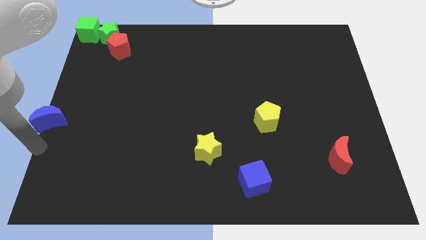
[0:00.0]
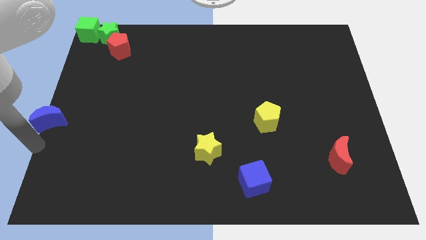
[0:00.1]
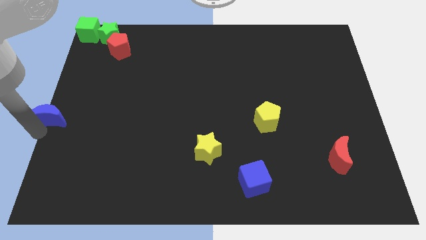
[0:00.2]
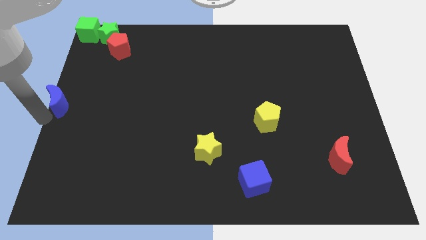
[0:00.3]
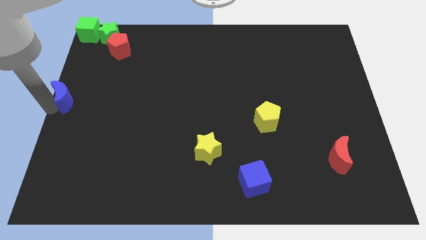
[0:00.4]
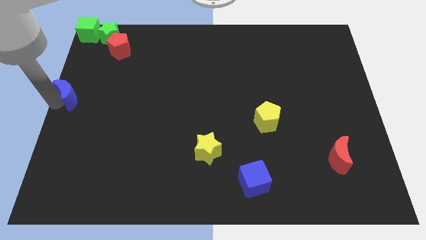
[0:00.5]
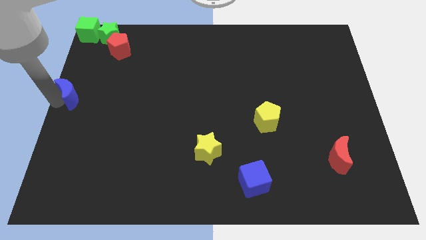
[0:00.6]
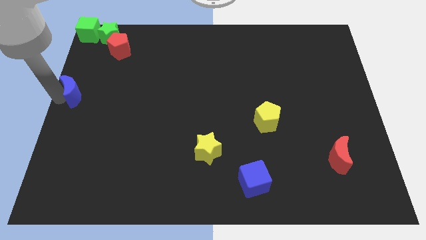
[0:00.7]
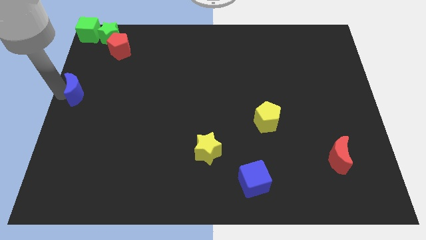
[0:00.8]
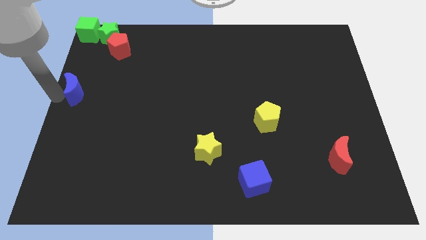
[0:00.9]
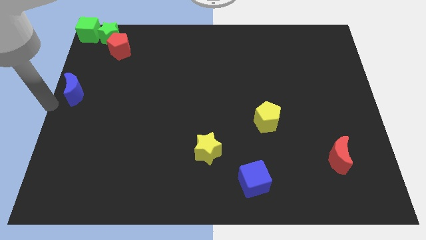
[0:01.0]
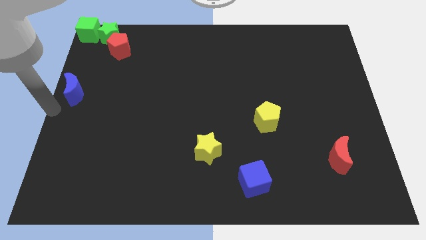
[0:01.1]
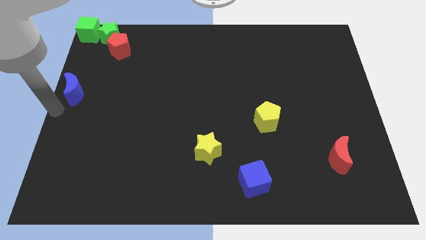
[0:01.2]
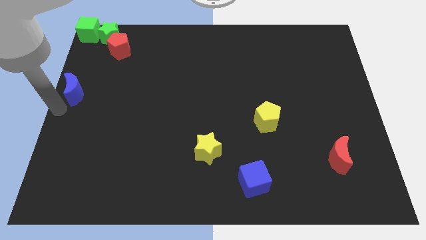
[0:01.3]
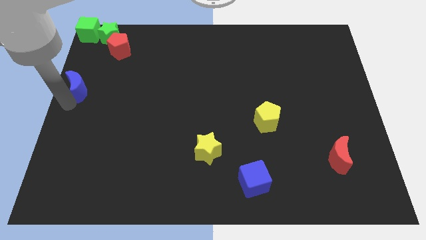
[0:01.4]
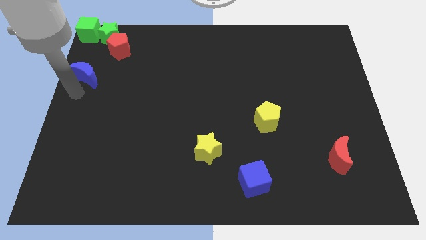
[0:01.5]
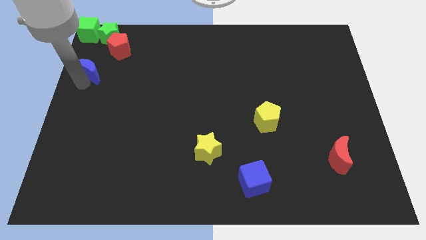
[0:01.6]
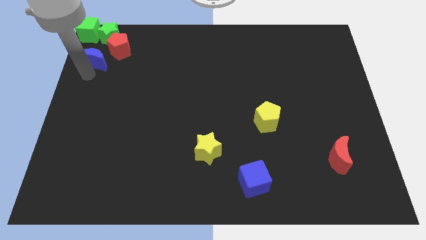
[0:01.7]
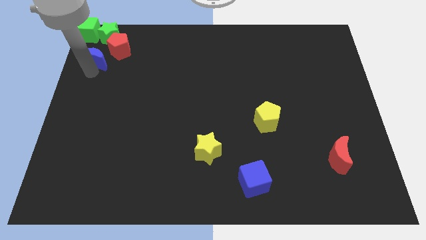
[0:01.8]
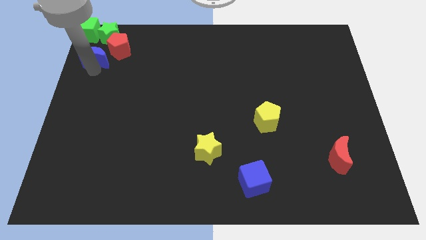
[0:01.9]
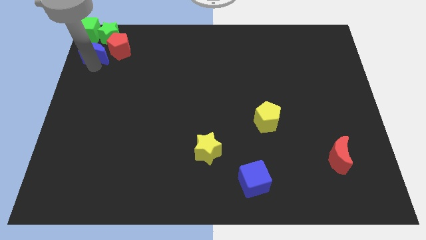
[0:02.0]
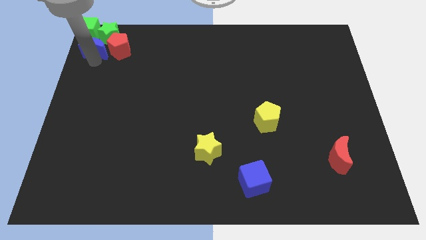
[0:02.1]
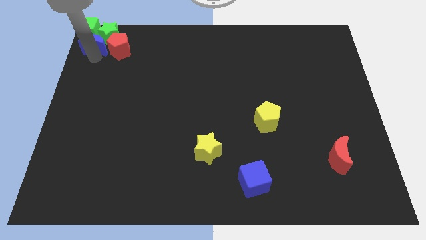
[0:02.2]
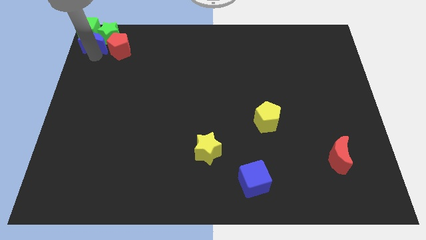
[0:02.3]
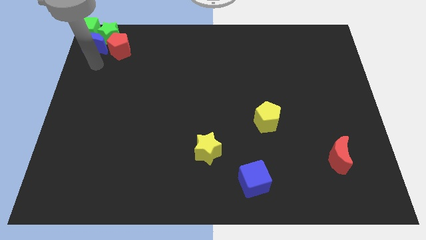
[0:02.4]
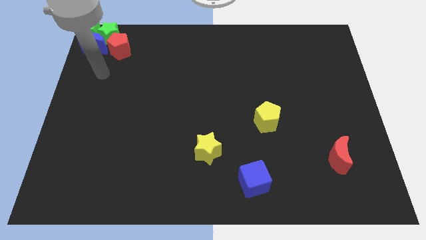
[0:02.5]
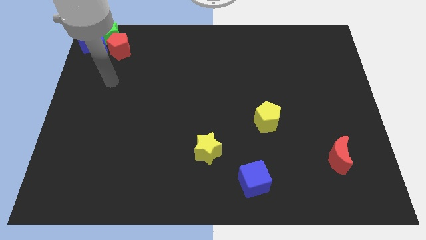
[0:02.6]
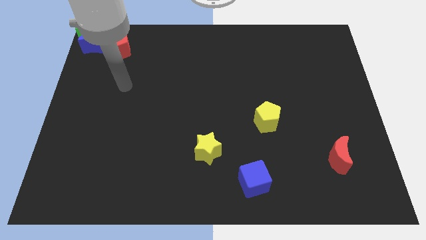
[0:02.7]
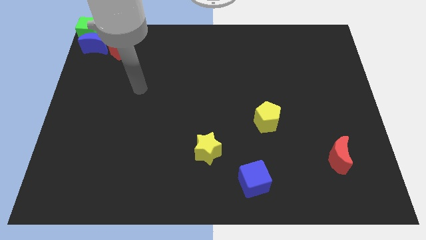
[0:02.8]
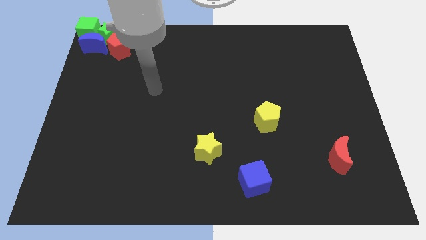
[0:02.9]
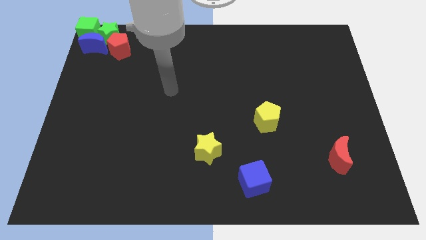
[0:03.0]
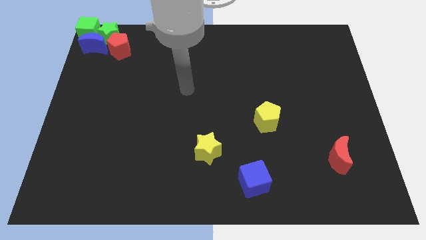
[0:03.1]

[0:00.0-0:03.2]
place the blue crescent below the green cube

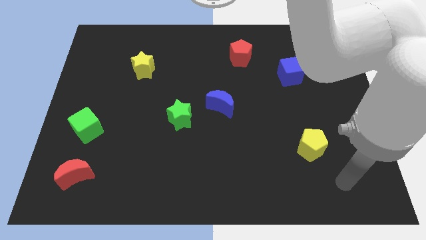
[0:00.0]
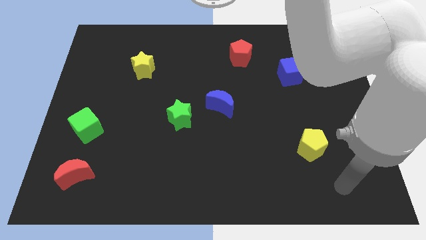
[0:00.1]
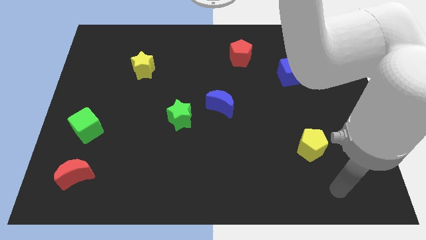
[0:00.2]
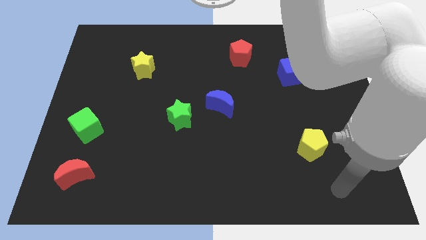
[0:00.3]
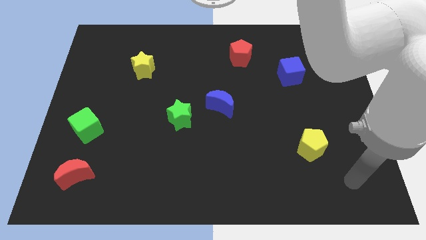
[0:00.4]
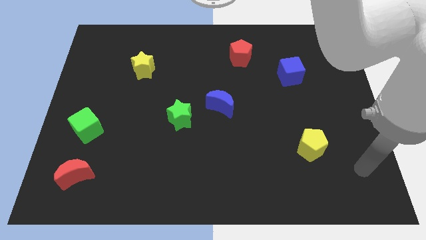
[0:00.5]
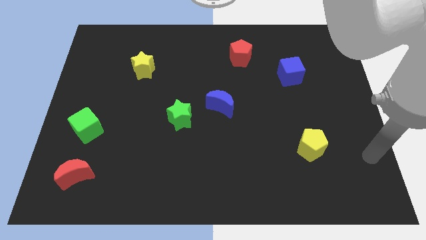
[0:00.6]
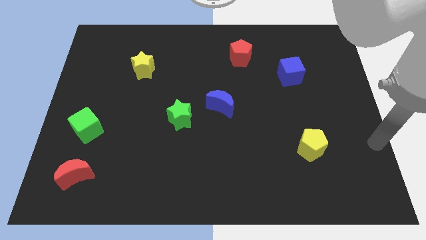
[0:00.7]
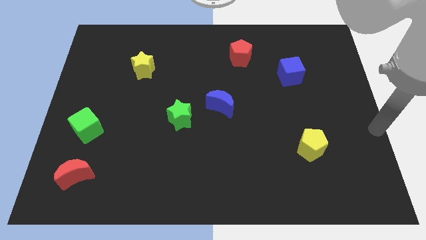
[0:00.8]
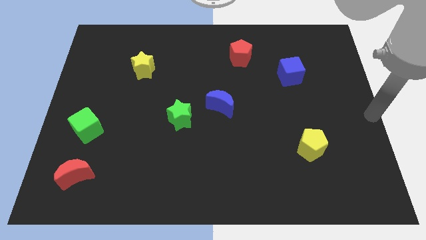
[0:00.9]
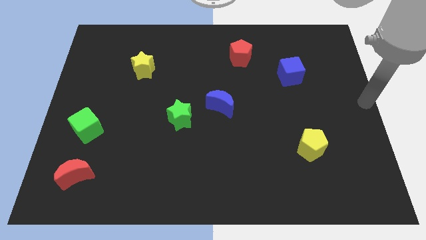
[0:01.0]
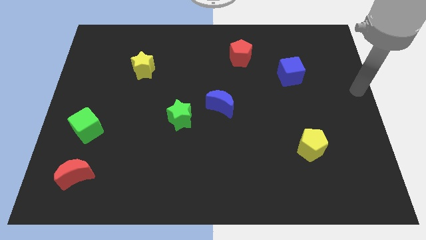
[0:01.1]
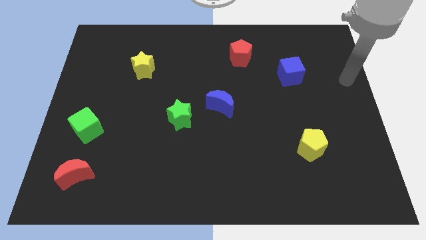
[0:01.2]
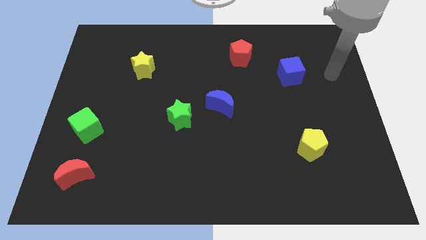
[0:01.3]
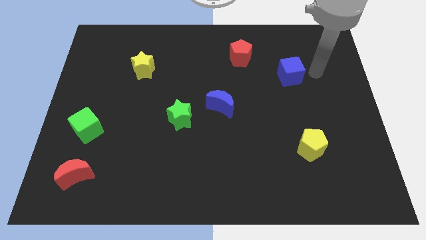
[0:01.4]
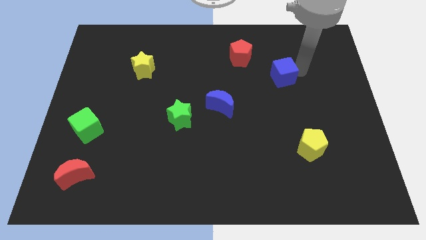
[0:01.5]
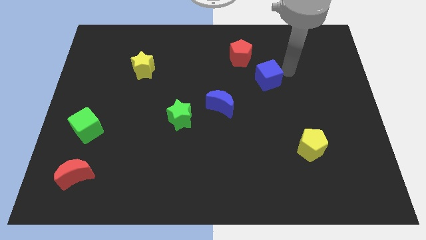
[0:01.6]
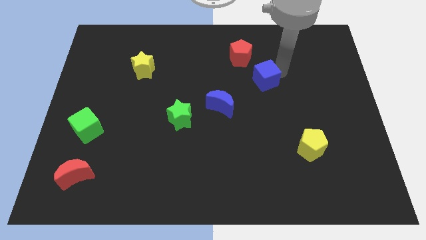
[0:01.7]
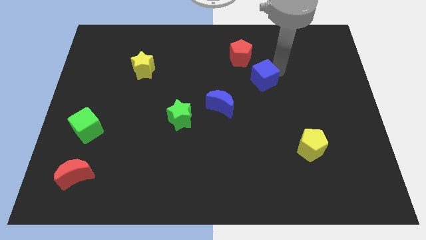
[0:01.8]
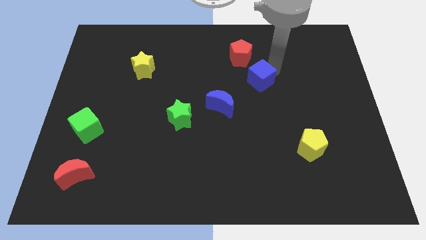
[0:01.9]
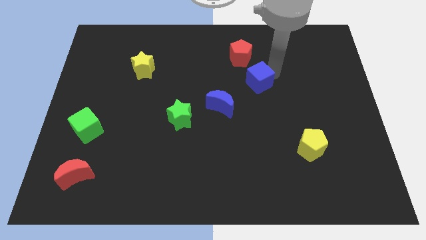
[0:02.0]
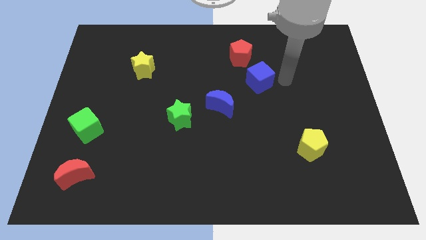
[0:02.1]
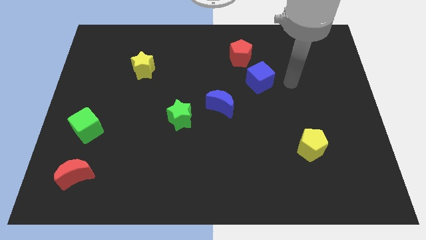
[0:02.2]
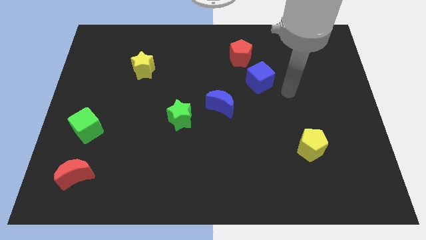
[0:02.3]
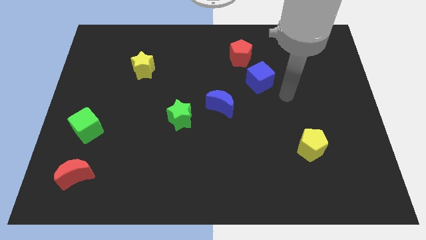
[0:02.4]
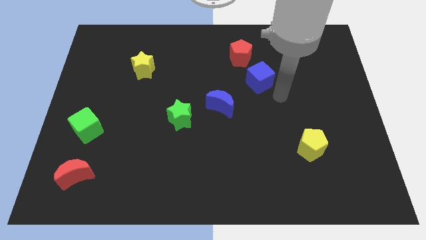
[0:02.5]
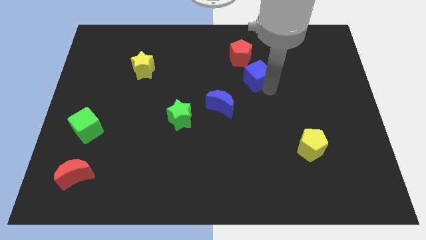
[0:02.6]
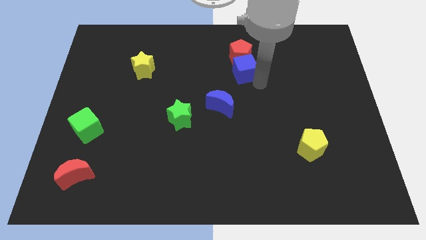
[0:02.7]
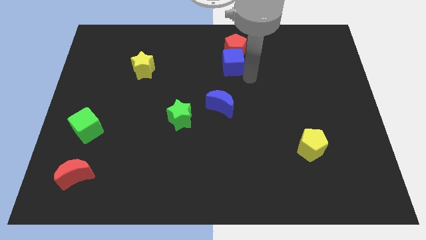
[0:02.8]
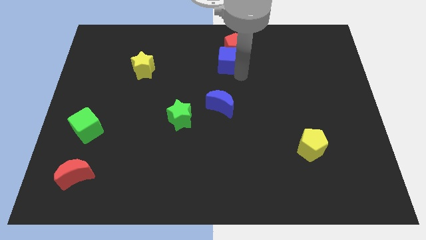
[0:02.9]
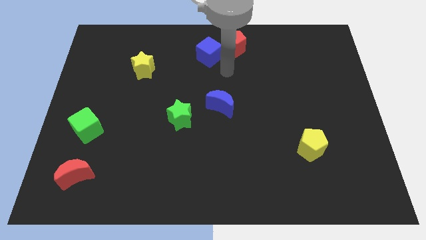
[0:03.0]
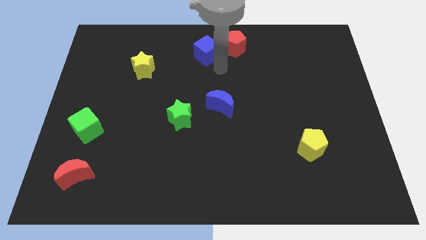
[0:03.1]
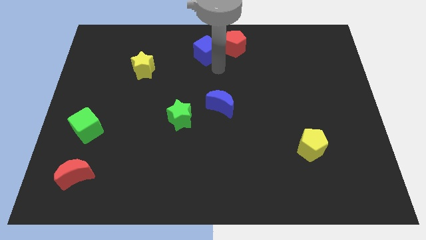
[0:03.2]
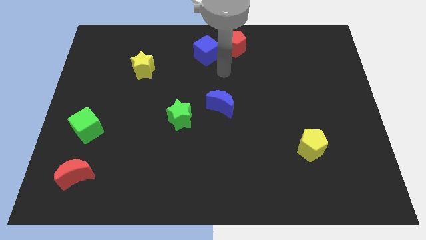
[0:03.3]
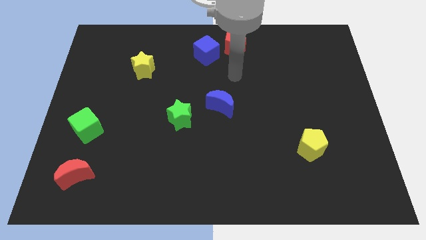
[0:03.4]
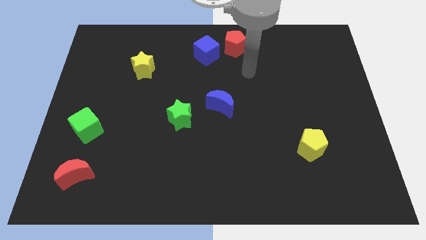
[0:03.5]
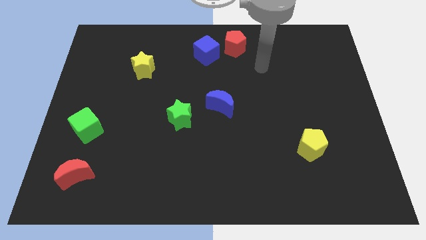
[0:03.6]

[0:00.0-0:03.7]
place blue cube beside red pentagon

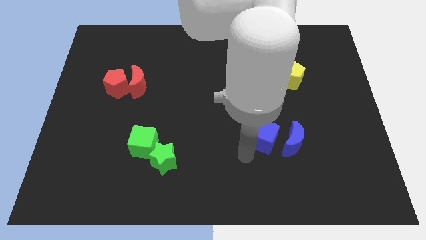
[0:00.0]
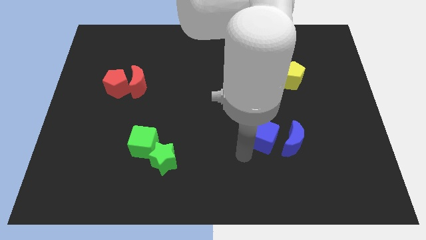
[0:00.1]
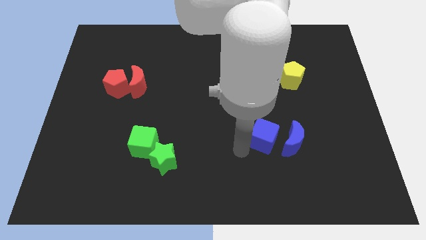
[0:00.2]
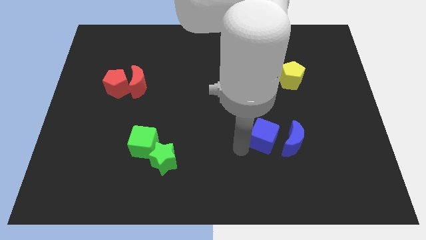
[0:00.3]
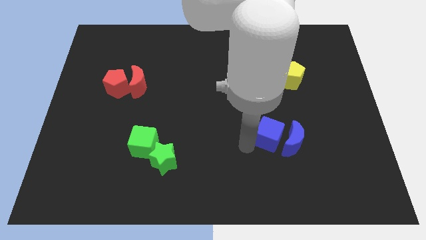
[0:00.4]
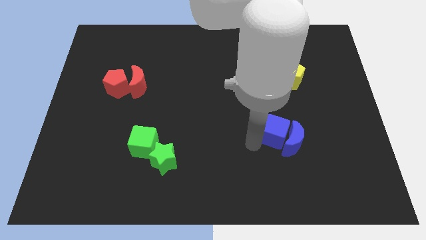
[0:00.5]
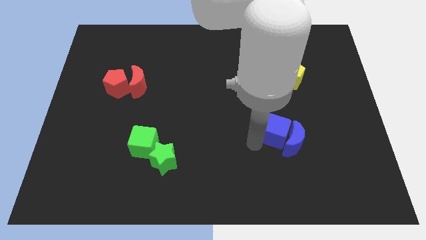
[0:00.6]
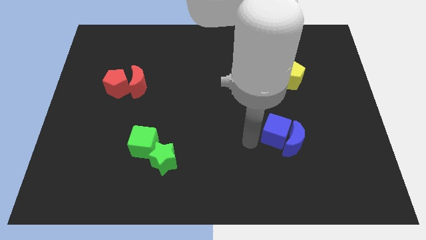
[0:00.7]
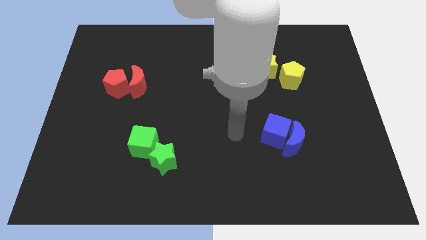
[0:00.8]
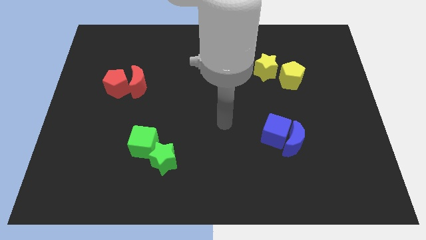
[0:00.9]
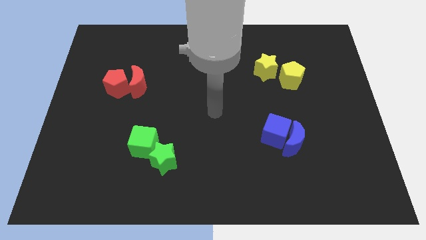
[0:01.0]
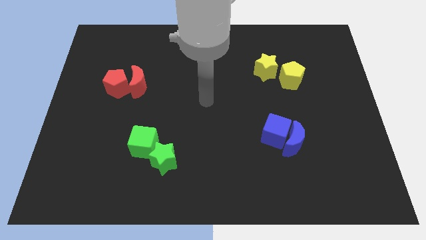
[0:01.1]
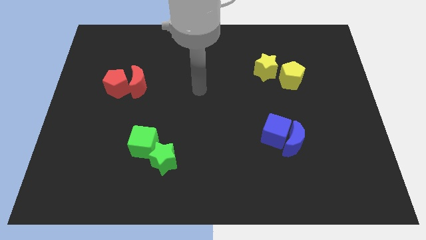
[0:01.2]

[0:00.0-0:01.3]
push the blue cube into the blue moon

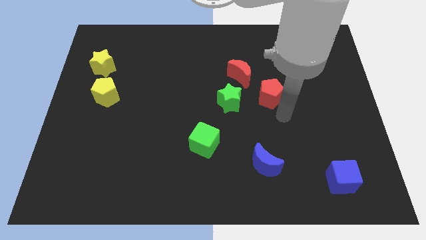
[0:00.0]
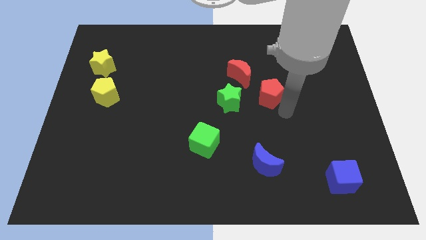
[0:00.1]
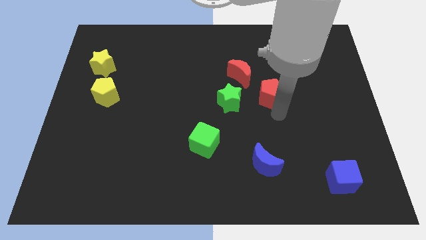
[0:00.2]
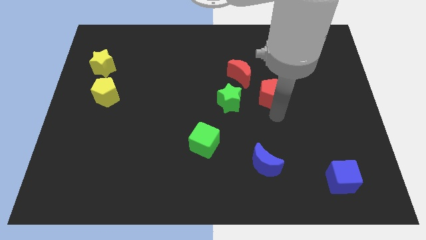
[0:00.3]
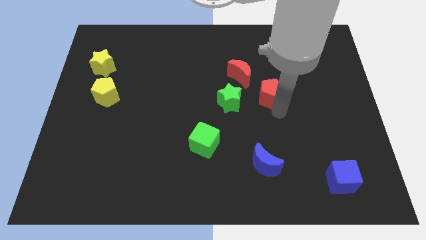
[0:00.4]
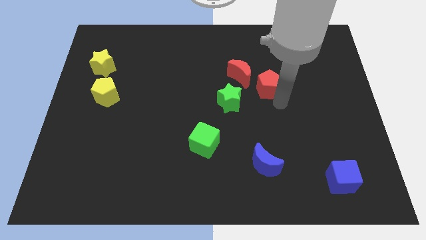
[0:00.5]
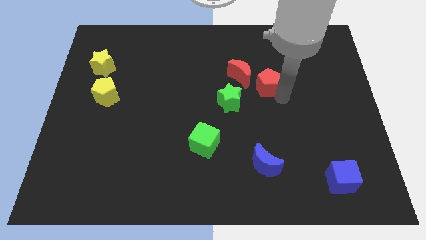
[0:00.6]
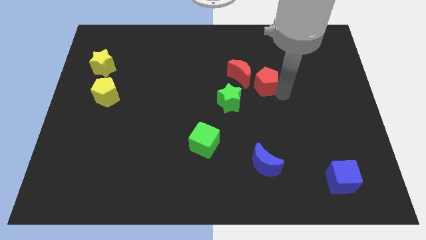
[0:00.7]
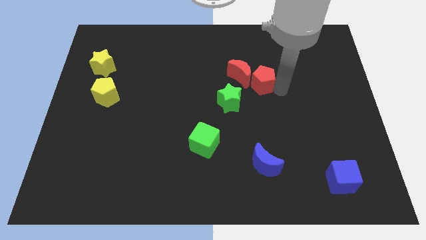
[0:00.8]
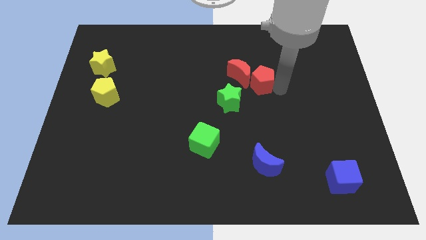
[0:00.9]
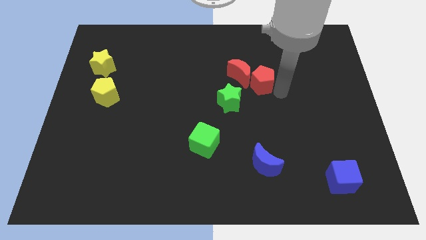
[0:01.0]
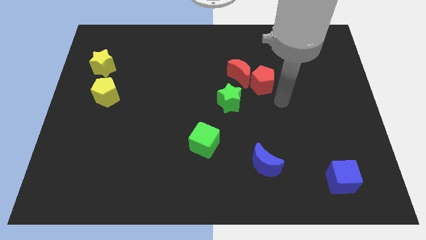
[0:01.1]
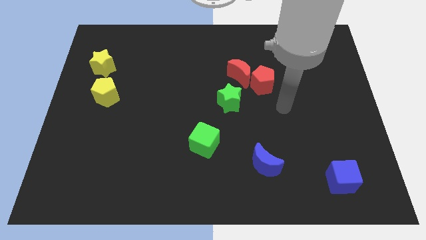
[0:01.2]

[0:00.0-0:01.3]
make the red pentagon touch the red crescent
